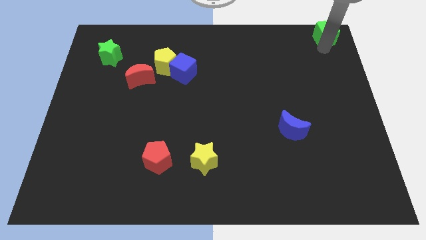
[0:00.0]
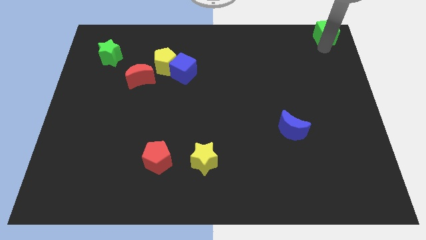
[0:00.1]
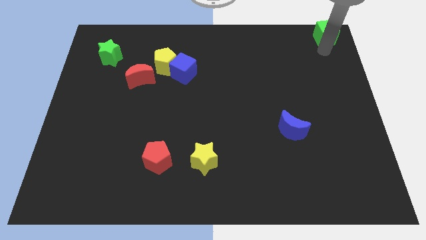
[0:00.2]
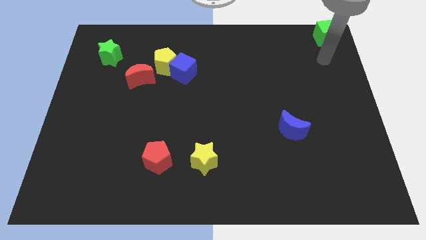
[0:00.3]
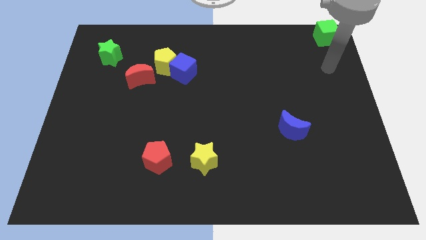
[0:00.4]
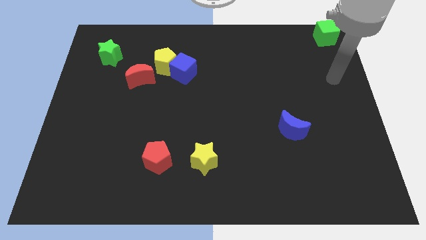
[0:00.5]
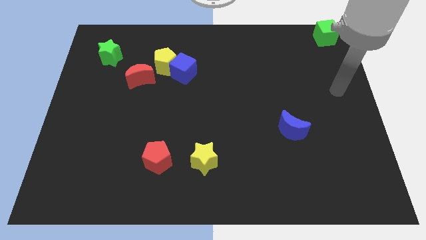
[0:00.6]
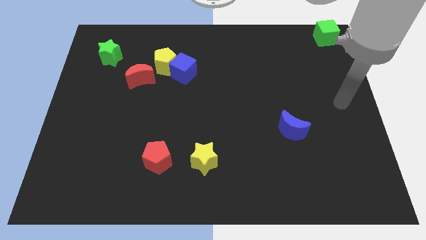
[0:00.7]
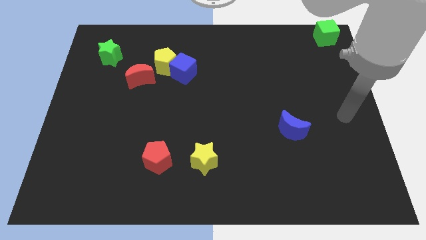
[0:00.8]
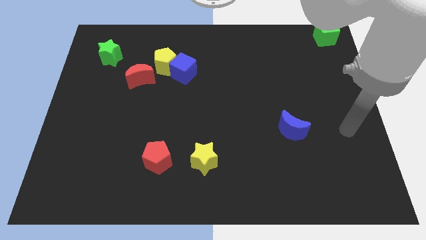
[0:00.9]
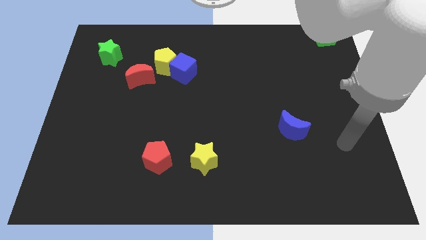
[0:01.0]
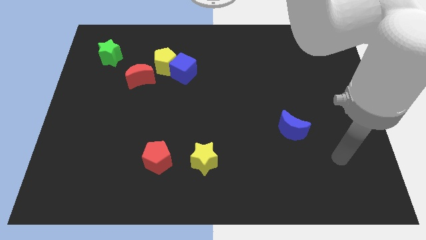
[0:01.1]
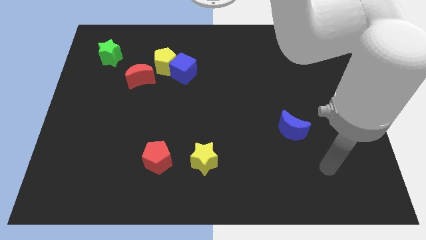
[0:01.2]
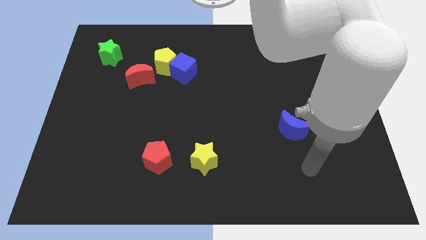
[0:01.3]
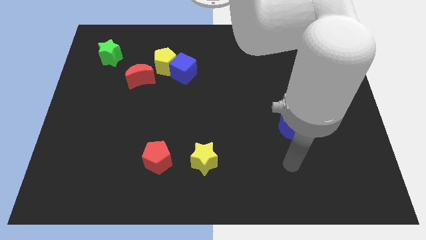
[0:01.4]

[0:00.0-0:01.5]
move yourself away from the green cube

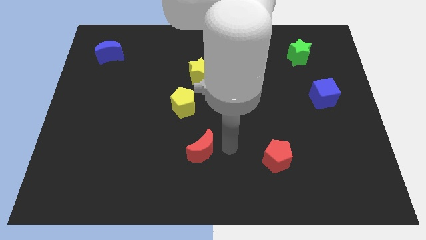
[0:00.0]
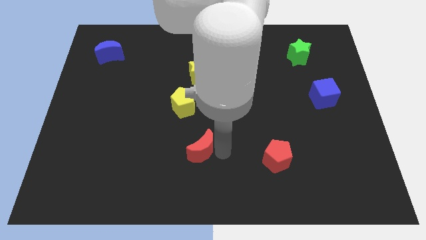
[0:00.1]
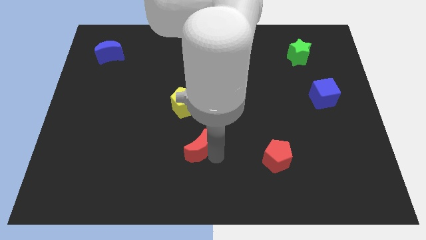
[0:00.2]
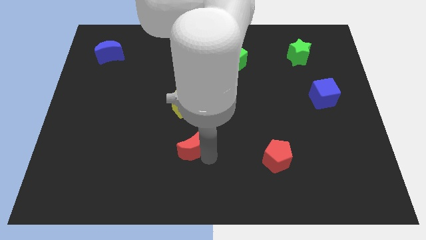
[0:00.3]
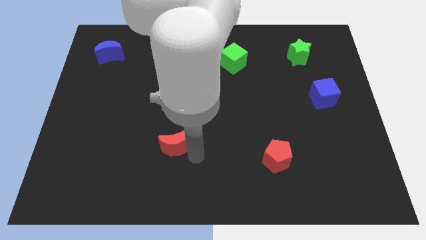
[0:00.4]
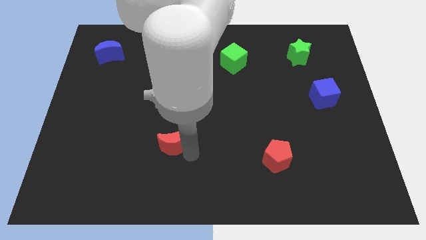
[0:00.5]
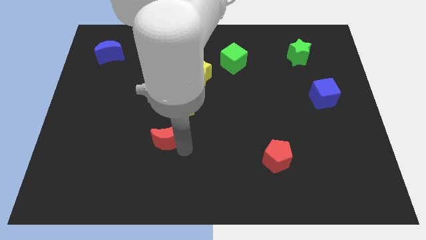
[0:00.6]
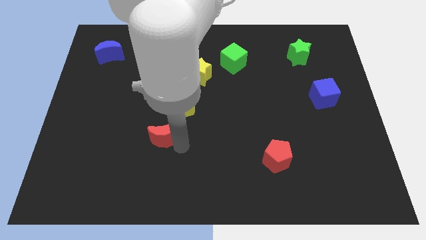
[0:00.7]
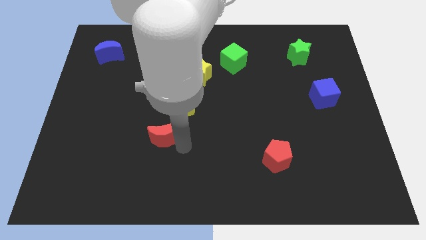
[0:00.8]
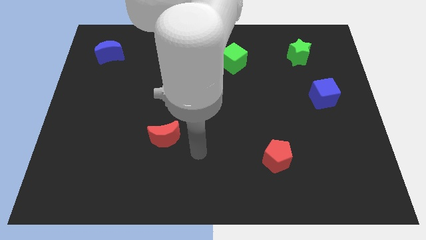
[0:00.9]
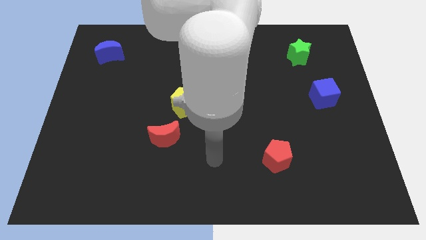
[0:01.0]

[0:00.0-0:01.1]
slide red moon to the bottom left of yellow pentagon

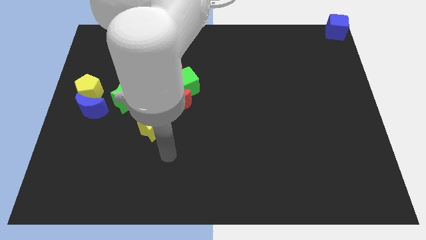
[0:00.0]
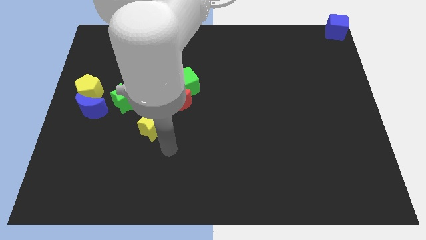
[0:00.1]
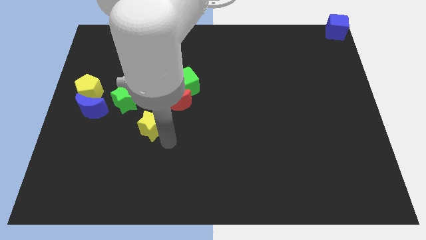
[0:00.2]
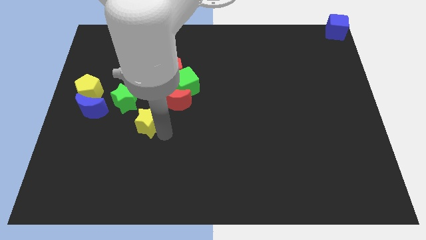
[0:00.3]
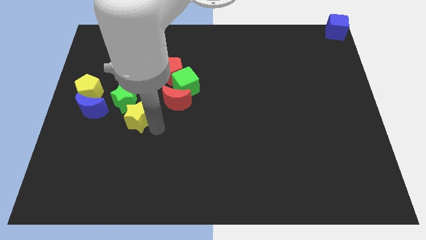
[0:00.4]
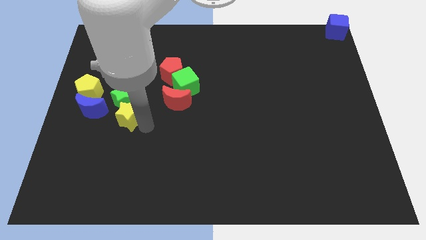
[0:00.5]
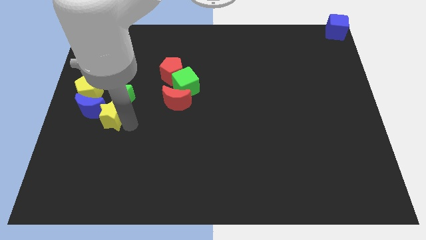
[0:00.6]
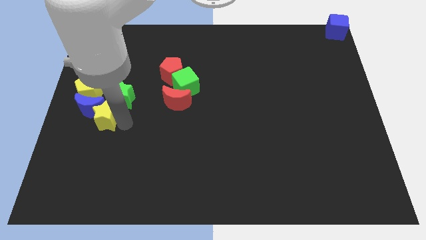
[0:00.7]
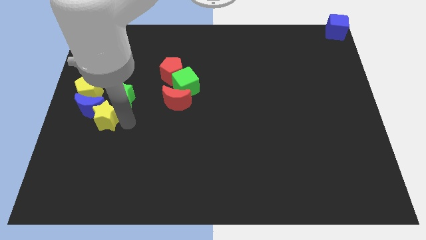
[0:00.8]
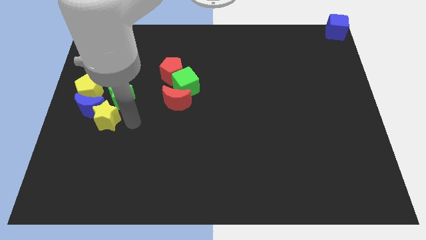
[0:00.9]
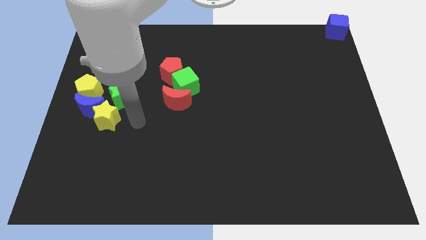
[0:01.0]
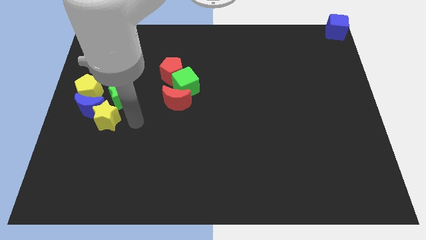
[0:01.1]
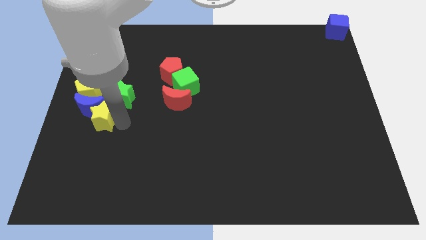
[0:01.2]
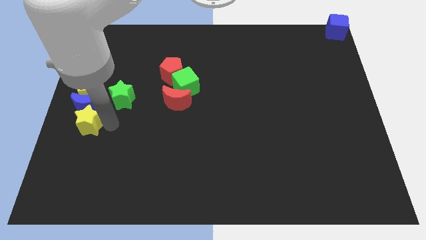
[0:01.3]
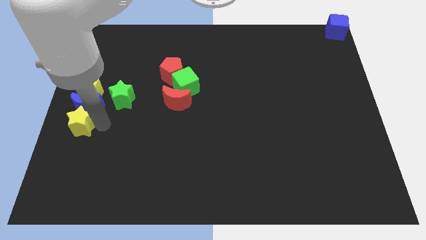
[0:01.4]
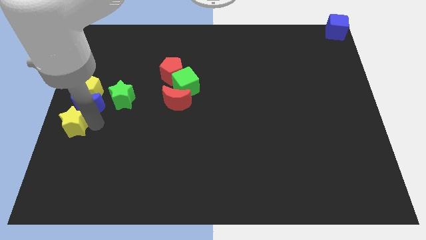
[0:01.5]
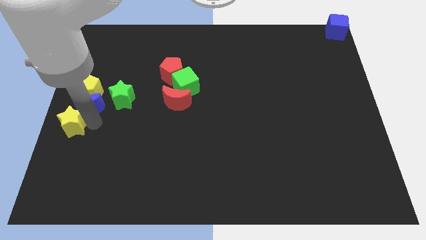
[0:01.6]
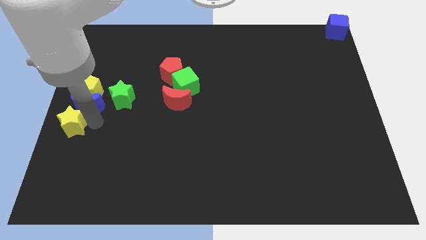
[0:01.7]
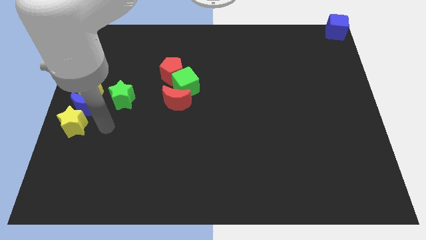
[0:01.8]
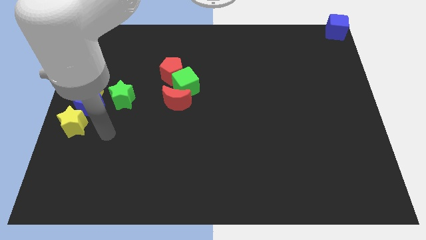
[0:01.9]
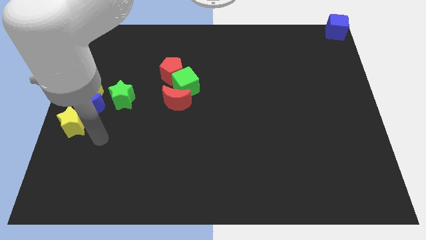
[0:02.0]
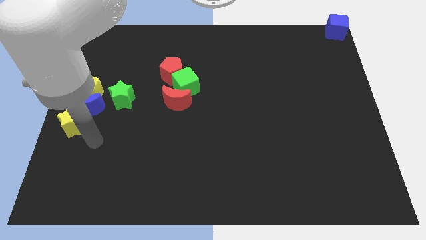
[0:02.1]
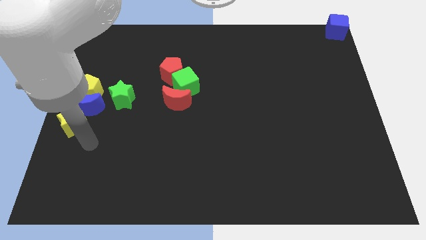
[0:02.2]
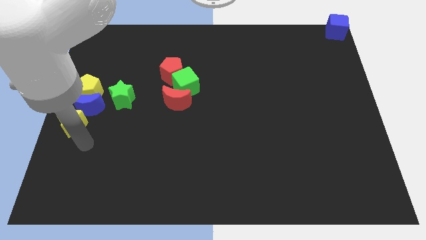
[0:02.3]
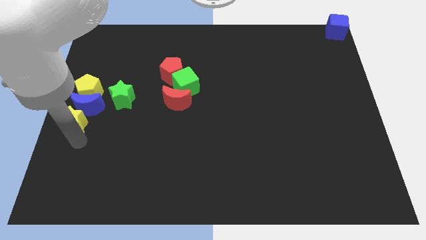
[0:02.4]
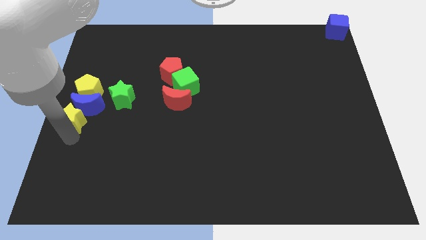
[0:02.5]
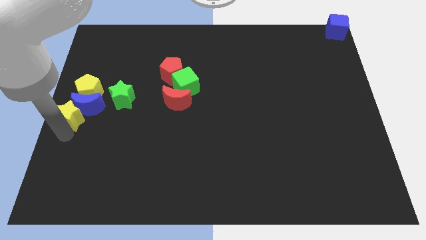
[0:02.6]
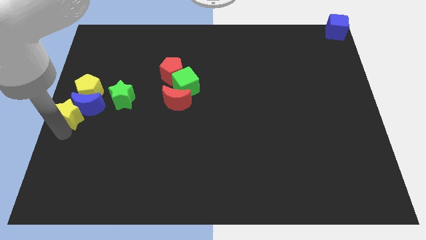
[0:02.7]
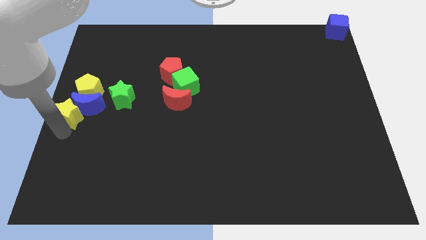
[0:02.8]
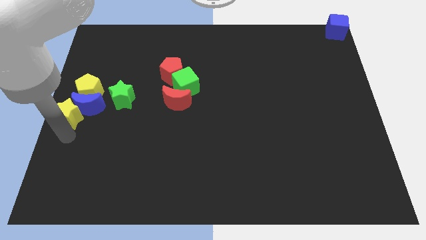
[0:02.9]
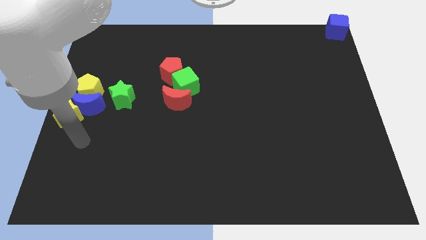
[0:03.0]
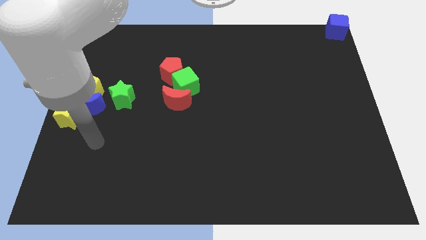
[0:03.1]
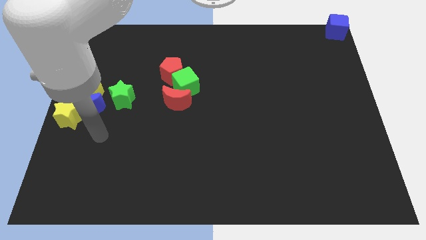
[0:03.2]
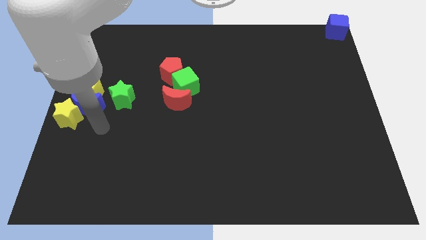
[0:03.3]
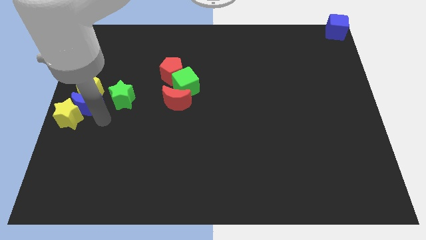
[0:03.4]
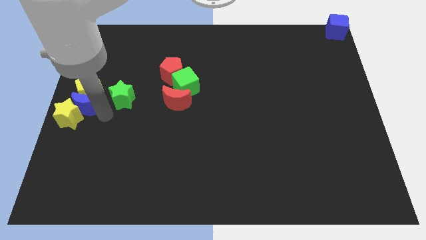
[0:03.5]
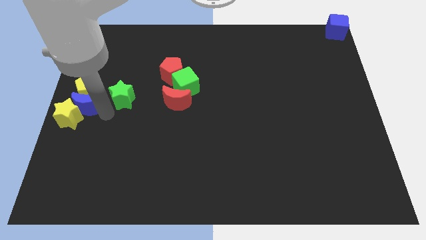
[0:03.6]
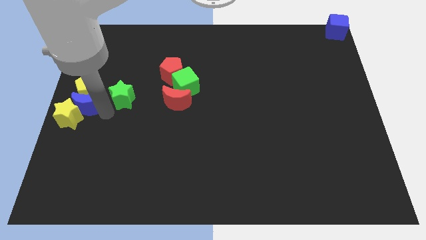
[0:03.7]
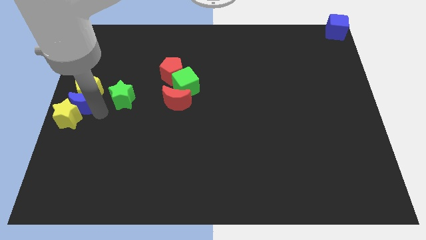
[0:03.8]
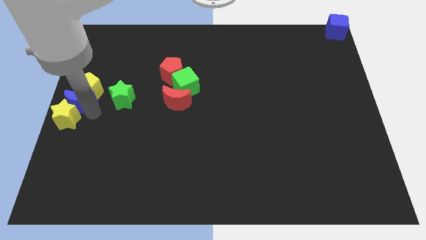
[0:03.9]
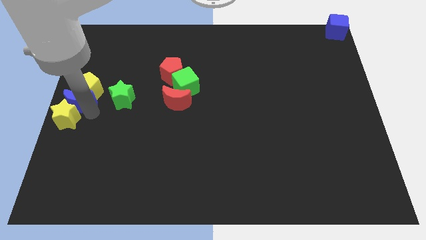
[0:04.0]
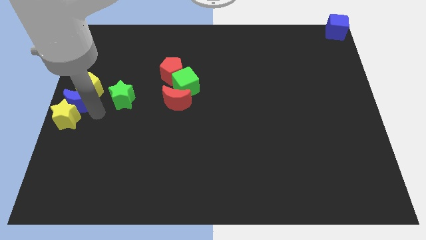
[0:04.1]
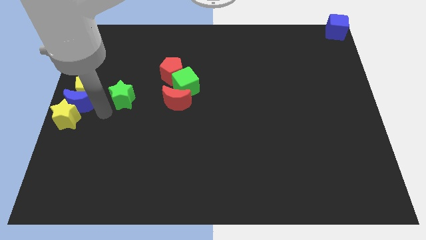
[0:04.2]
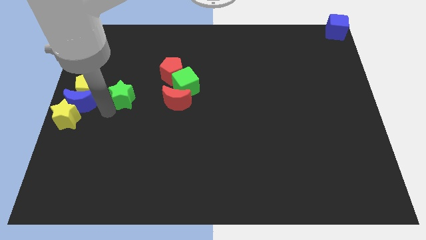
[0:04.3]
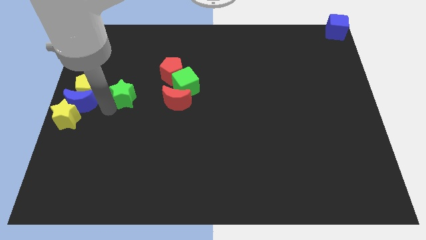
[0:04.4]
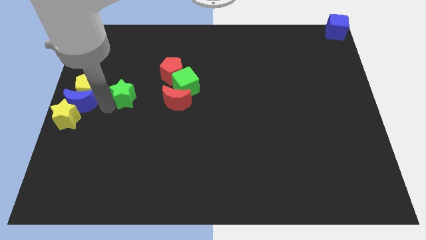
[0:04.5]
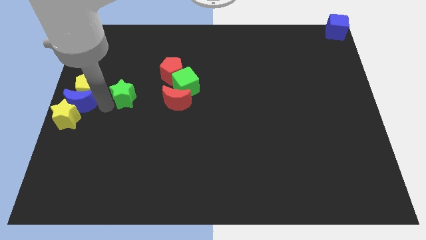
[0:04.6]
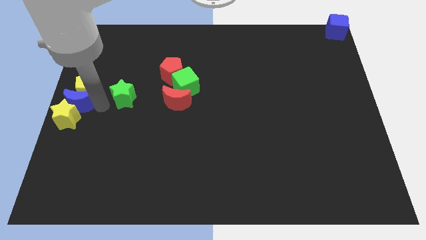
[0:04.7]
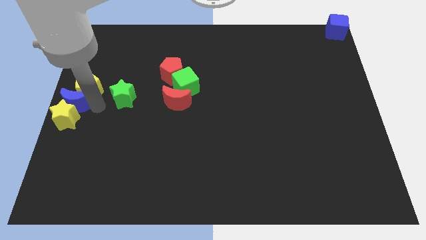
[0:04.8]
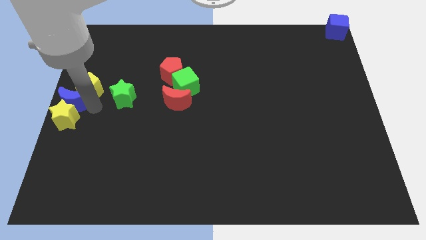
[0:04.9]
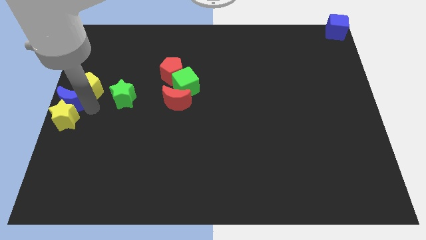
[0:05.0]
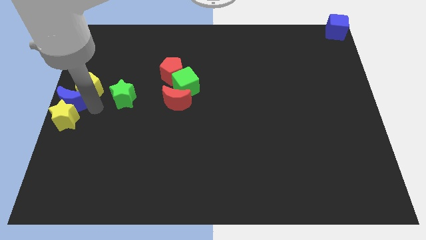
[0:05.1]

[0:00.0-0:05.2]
place the yellow star to the center left of the board

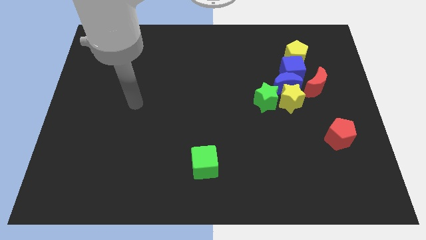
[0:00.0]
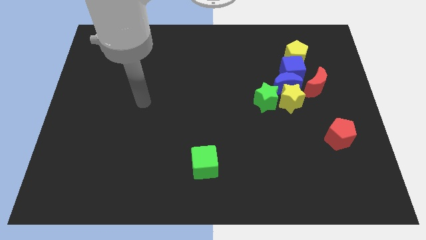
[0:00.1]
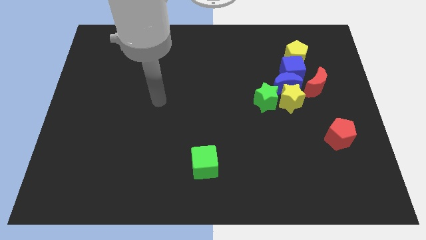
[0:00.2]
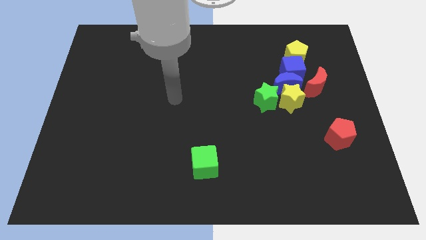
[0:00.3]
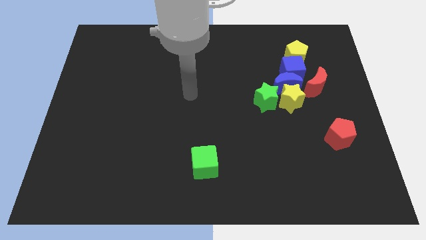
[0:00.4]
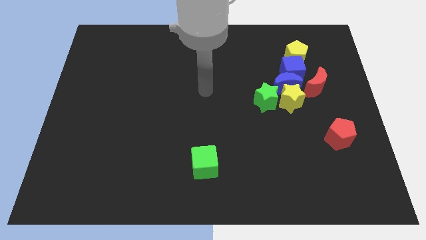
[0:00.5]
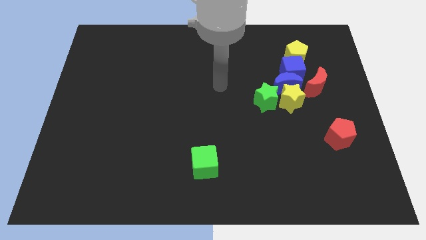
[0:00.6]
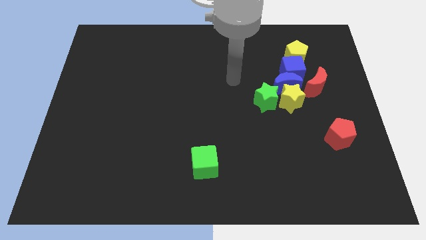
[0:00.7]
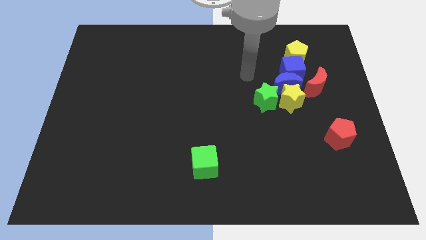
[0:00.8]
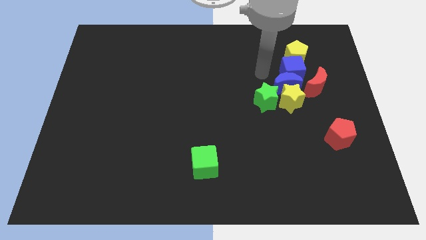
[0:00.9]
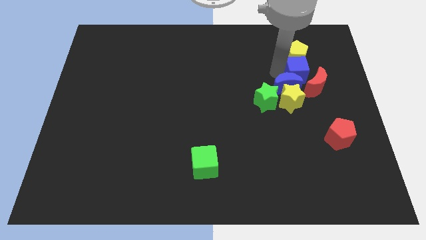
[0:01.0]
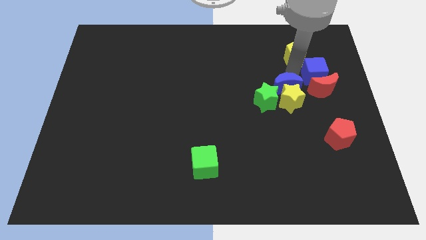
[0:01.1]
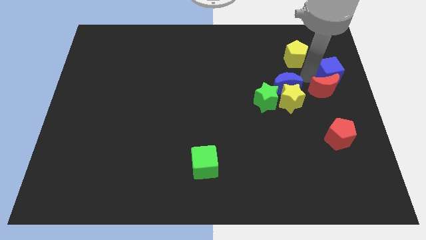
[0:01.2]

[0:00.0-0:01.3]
move your arm close to the blue cube
